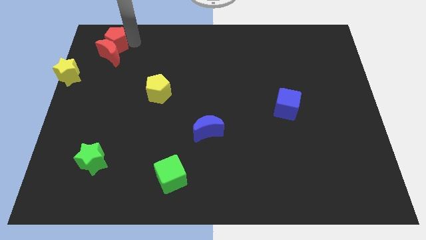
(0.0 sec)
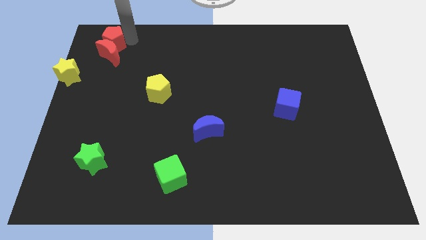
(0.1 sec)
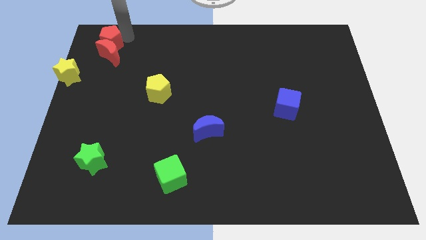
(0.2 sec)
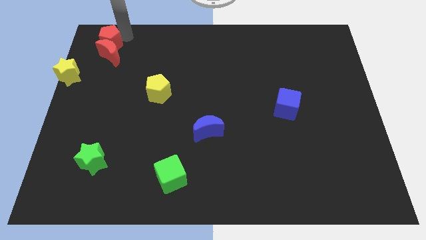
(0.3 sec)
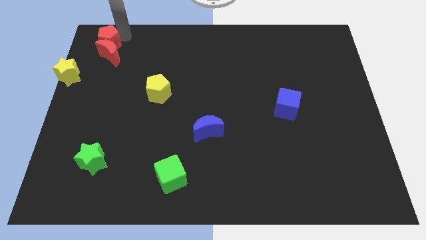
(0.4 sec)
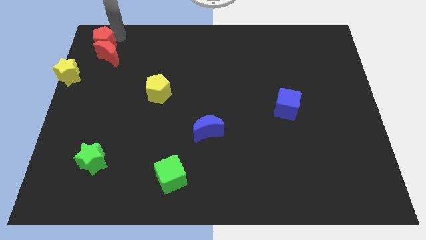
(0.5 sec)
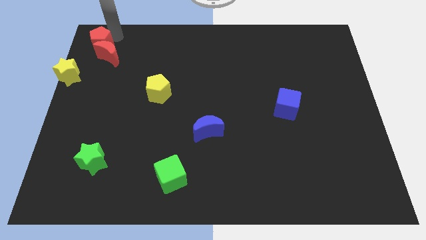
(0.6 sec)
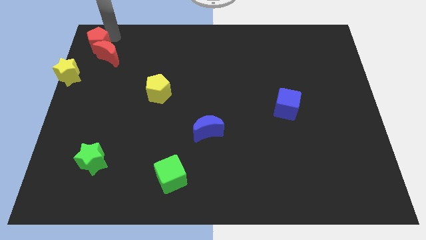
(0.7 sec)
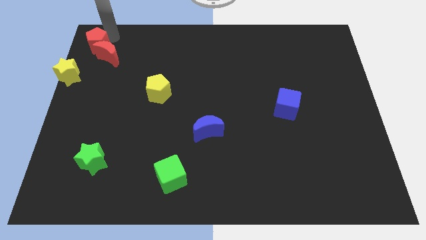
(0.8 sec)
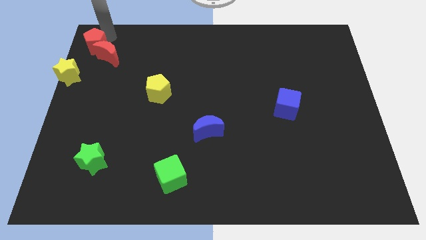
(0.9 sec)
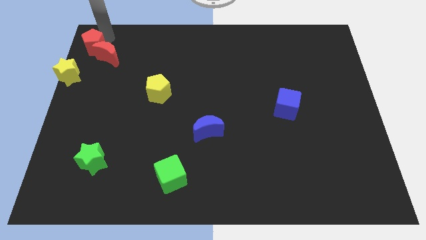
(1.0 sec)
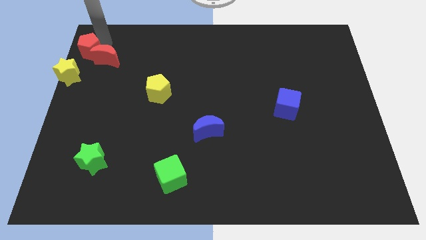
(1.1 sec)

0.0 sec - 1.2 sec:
place the the red pentagon towards the top left side of the red crescent

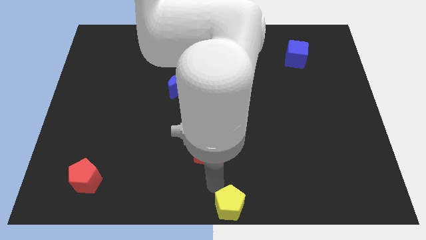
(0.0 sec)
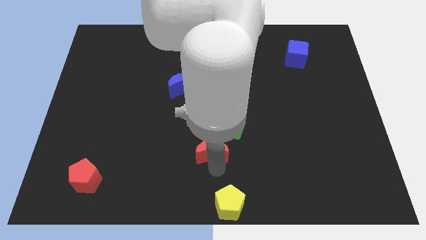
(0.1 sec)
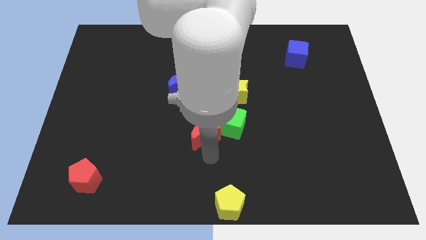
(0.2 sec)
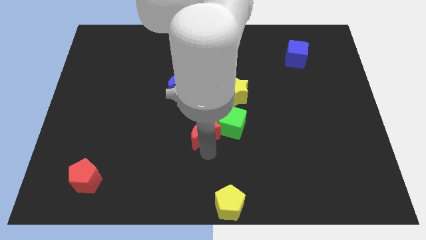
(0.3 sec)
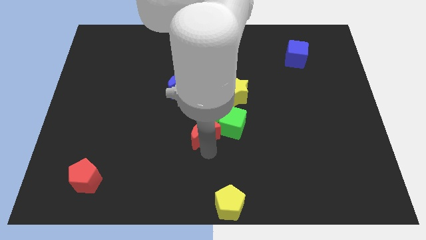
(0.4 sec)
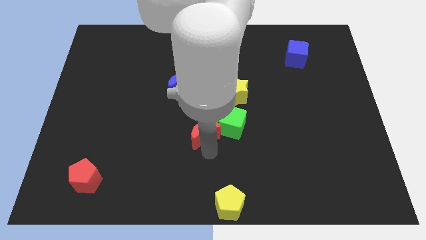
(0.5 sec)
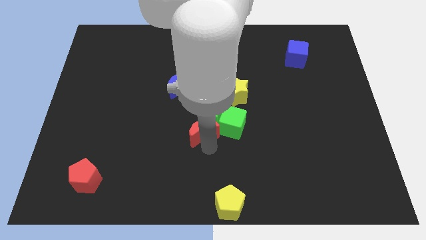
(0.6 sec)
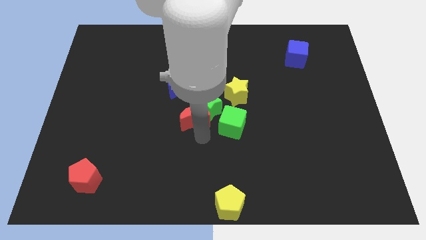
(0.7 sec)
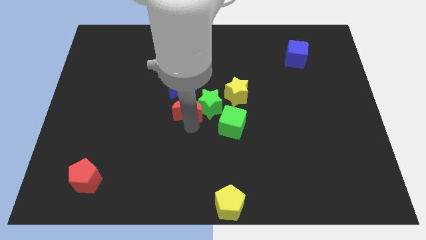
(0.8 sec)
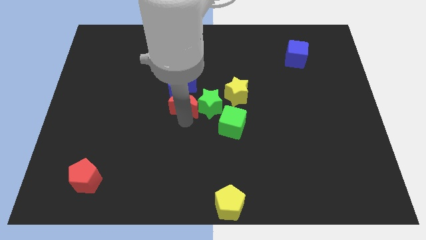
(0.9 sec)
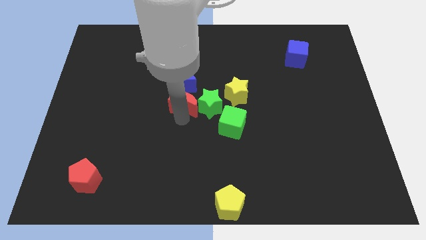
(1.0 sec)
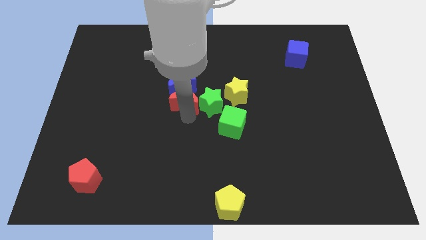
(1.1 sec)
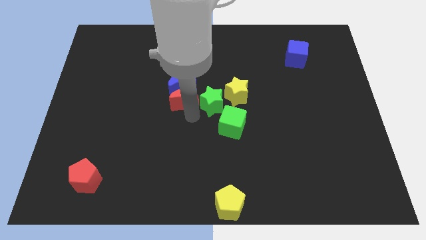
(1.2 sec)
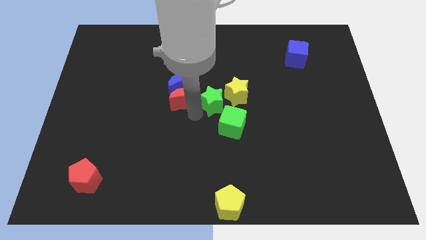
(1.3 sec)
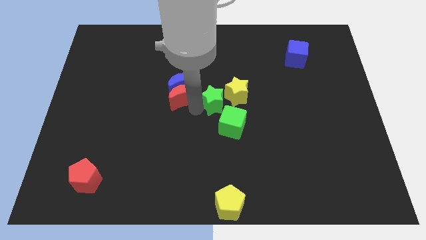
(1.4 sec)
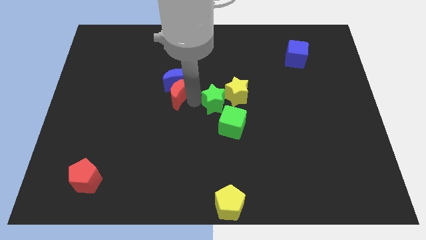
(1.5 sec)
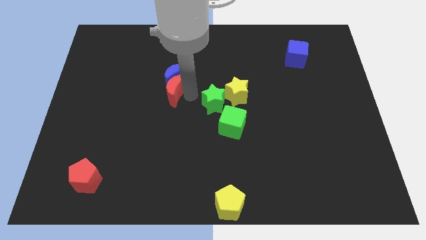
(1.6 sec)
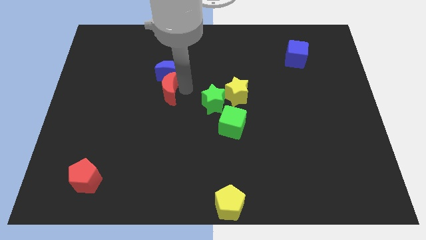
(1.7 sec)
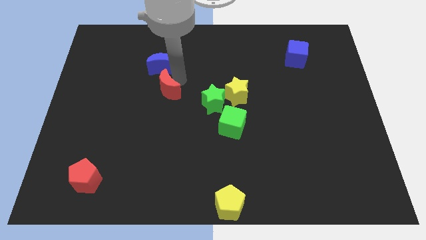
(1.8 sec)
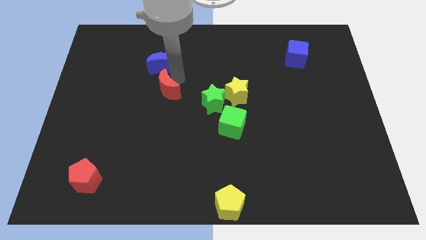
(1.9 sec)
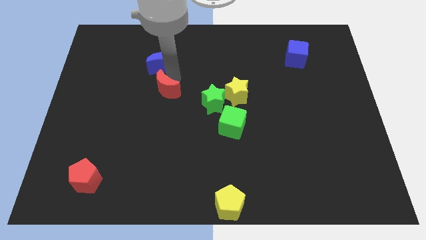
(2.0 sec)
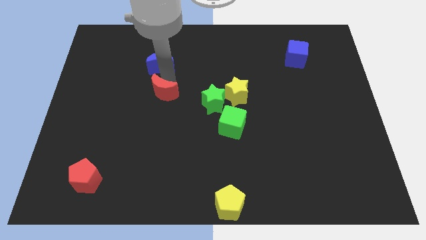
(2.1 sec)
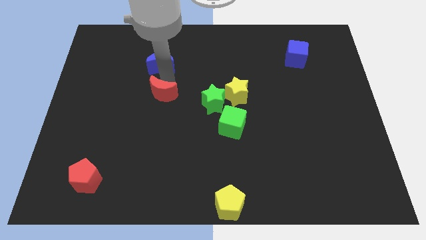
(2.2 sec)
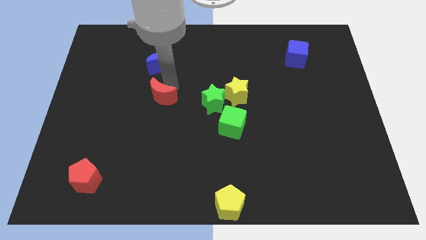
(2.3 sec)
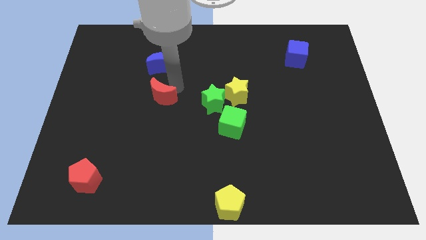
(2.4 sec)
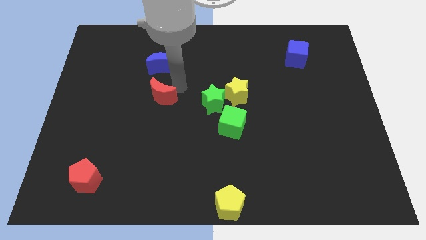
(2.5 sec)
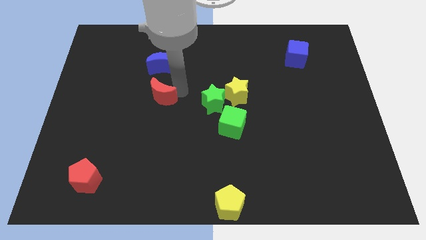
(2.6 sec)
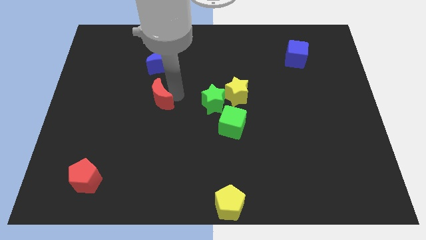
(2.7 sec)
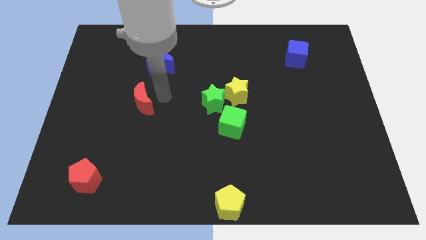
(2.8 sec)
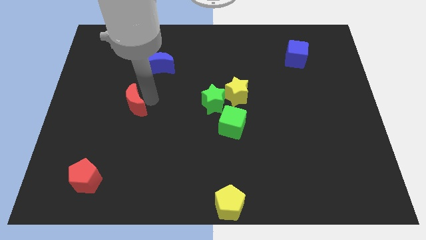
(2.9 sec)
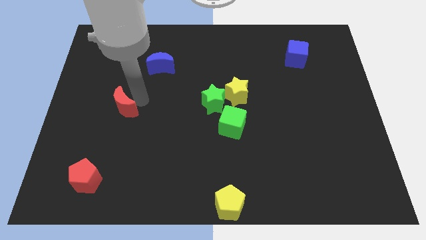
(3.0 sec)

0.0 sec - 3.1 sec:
move the red crescent towards the center left side of the board

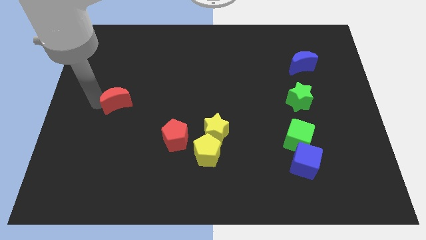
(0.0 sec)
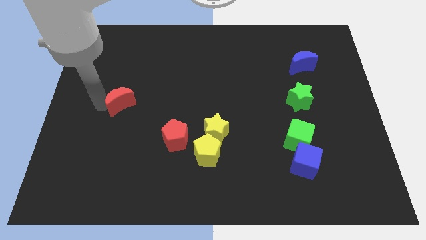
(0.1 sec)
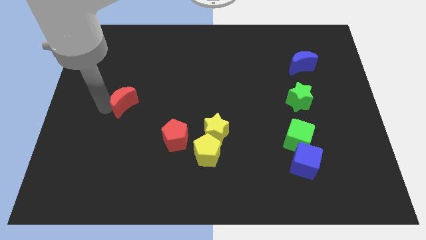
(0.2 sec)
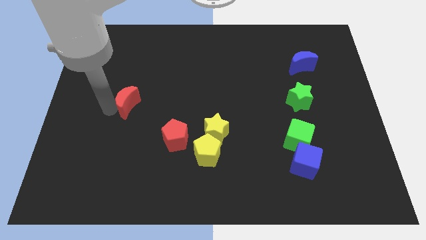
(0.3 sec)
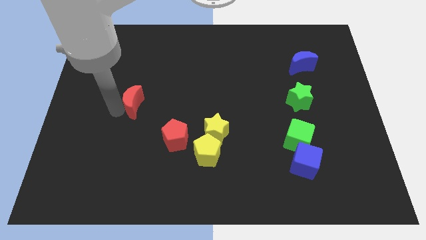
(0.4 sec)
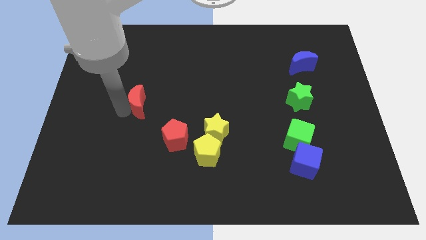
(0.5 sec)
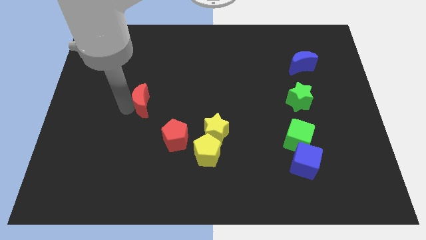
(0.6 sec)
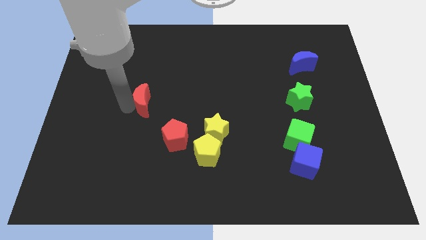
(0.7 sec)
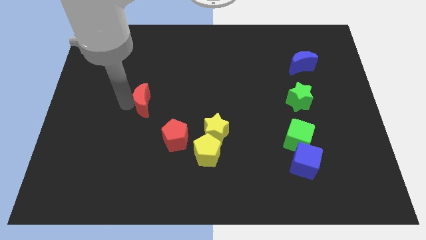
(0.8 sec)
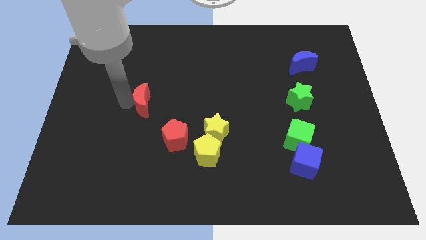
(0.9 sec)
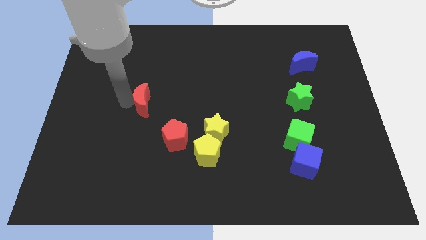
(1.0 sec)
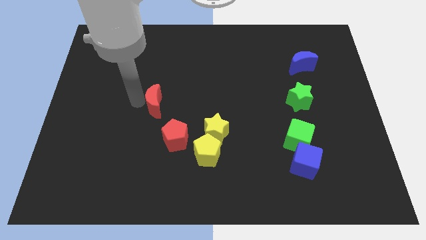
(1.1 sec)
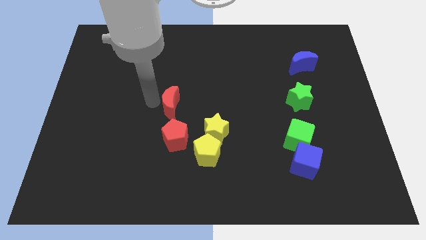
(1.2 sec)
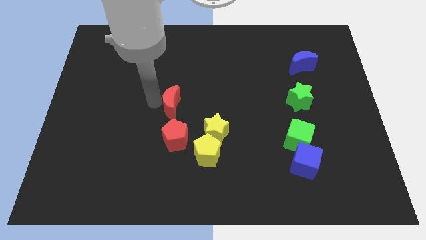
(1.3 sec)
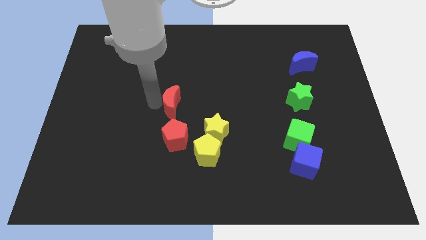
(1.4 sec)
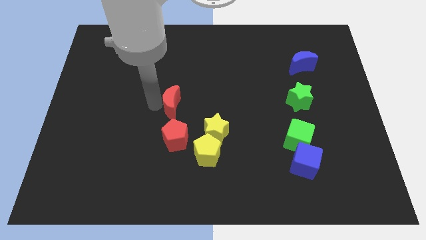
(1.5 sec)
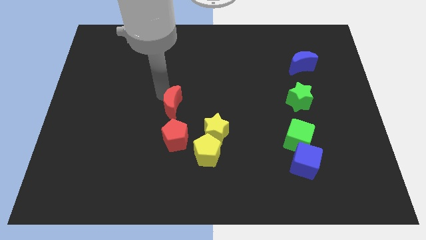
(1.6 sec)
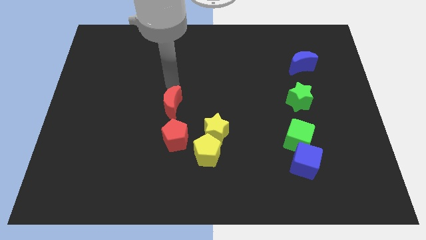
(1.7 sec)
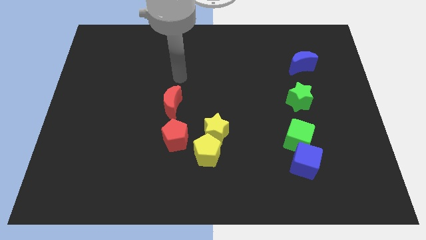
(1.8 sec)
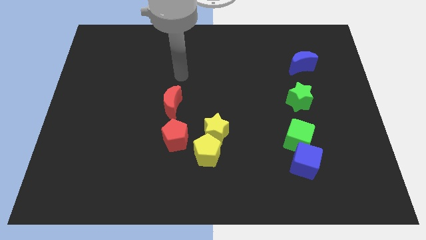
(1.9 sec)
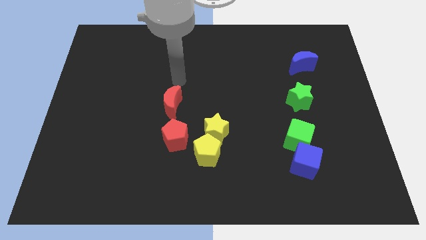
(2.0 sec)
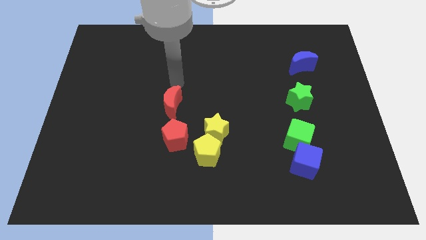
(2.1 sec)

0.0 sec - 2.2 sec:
place the red moon to the top of the red pentagon

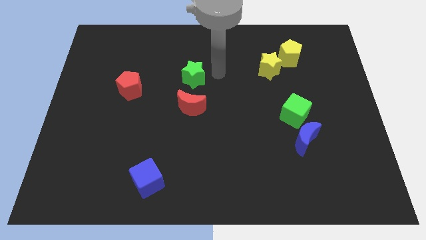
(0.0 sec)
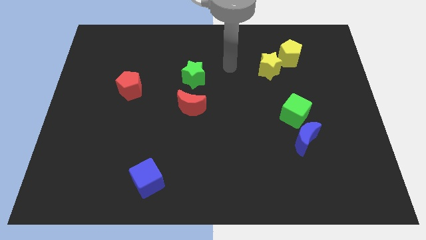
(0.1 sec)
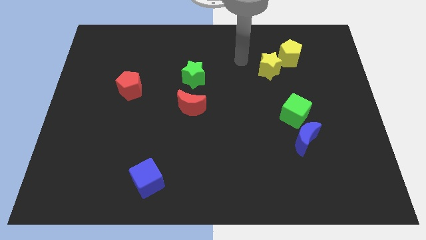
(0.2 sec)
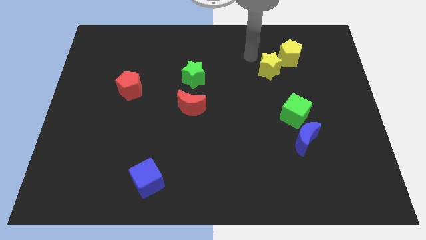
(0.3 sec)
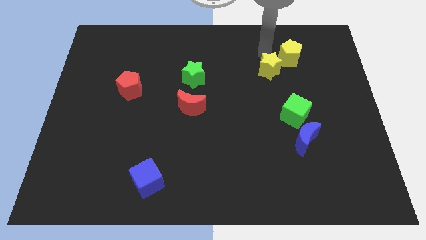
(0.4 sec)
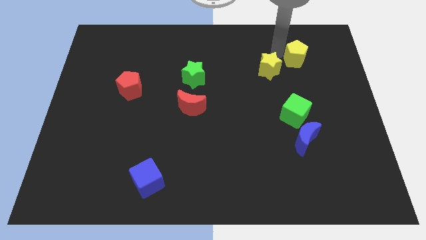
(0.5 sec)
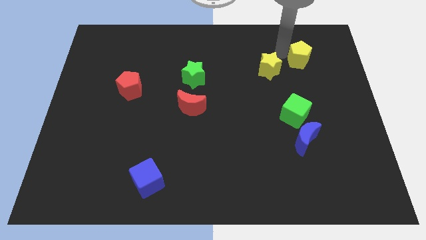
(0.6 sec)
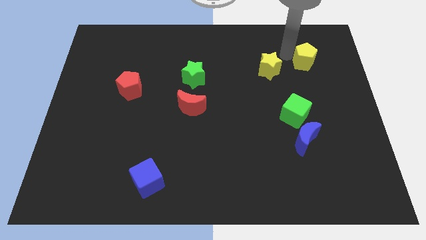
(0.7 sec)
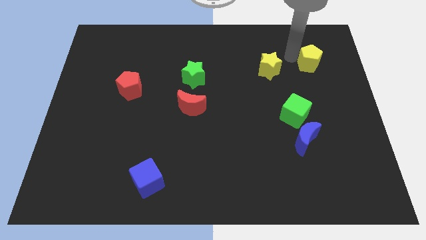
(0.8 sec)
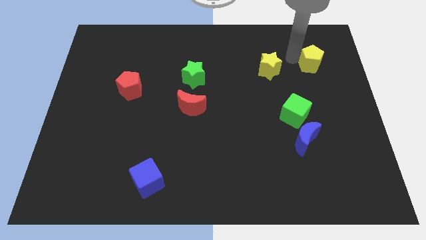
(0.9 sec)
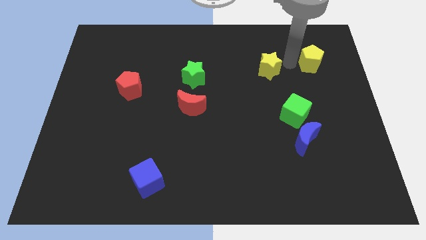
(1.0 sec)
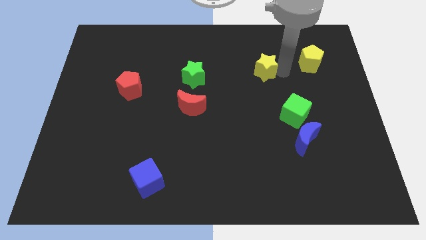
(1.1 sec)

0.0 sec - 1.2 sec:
move the yellow pentagon to the right of the yellow star

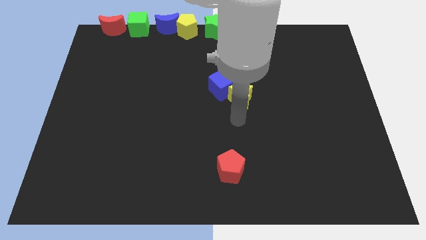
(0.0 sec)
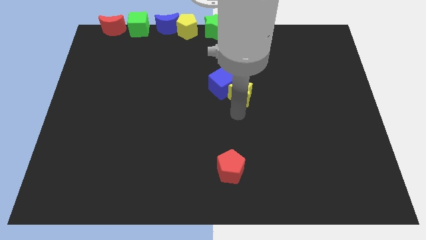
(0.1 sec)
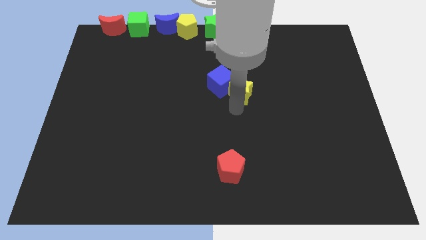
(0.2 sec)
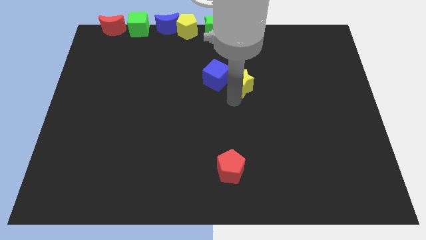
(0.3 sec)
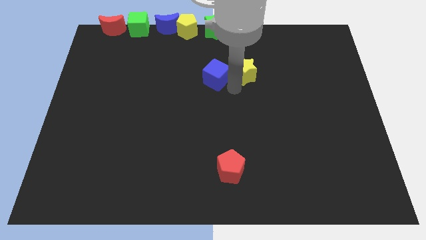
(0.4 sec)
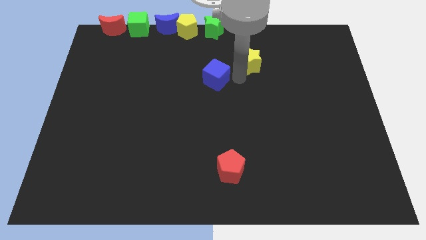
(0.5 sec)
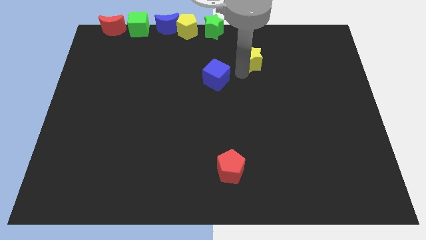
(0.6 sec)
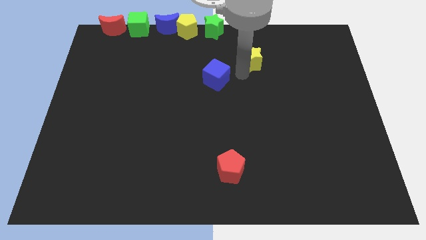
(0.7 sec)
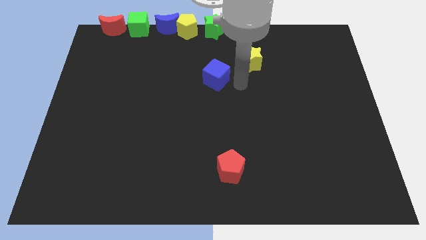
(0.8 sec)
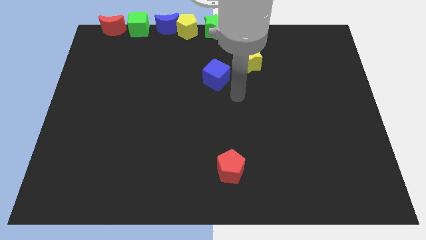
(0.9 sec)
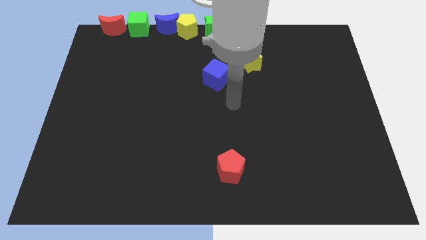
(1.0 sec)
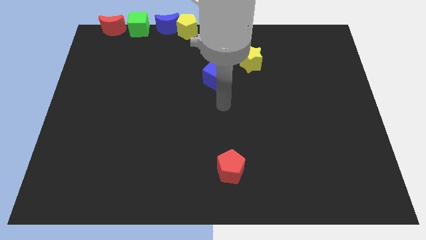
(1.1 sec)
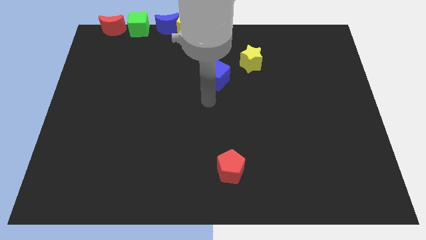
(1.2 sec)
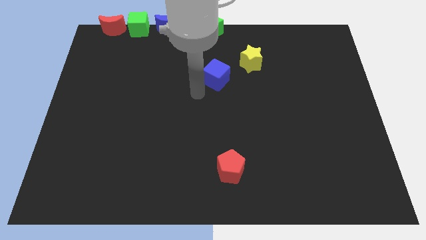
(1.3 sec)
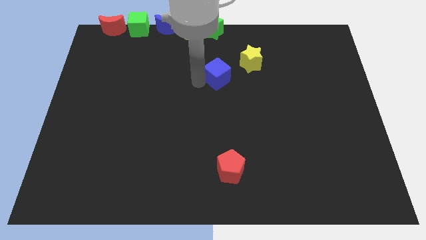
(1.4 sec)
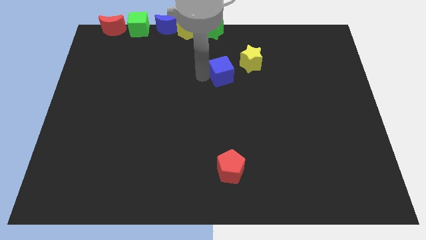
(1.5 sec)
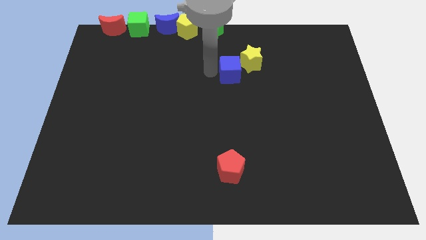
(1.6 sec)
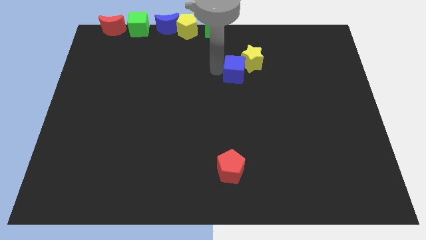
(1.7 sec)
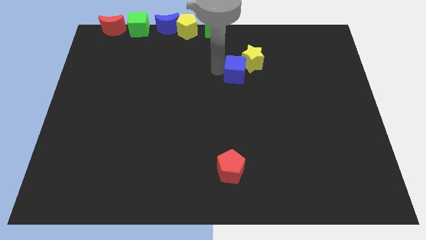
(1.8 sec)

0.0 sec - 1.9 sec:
move the blue cube close left to the yellow star
